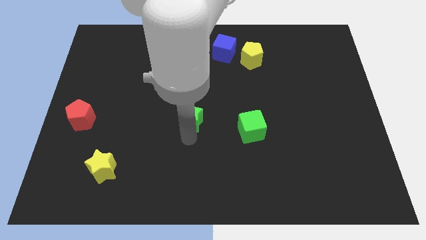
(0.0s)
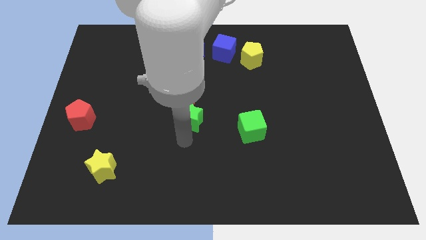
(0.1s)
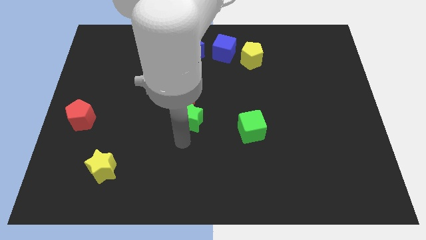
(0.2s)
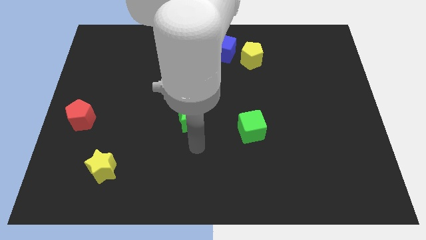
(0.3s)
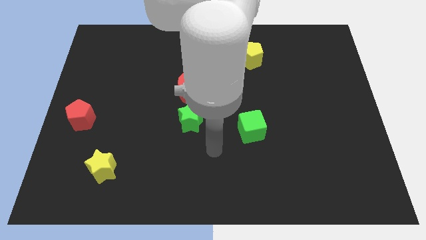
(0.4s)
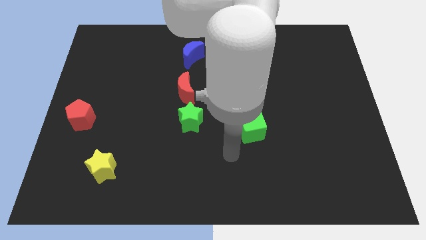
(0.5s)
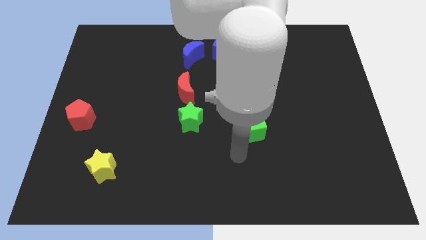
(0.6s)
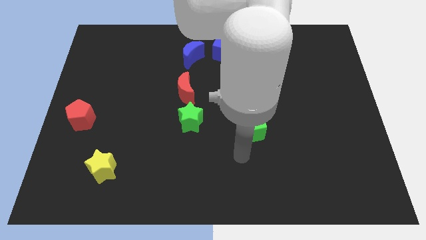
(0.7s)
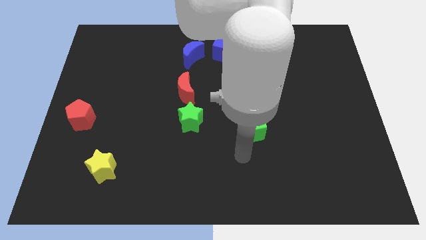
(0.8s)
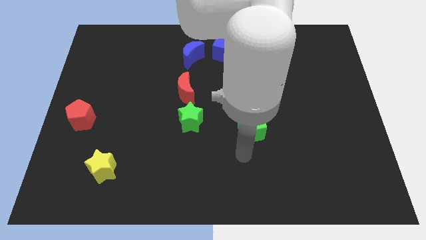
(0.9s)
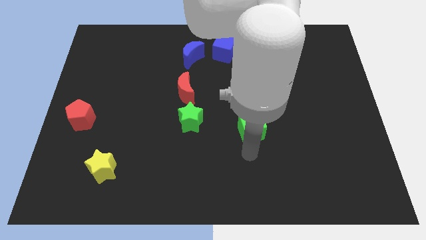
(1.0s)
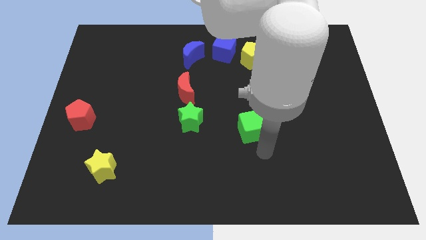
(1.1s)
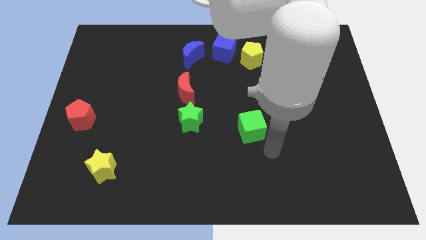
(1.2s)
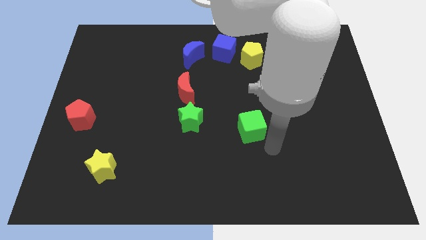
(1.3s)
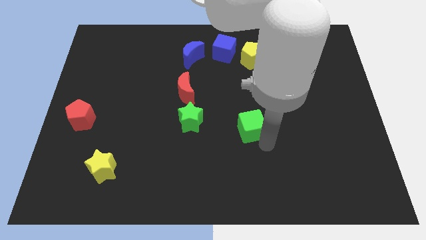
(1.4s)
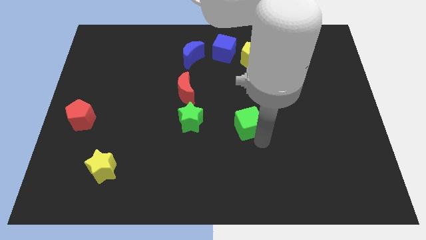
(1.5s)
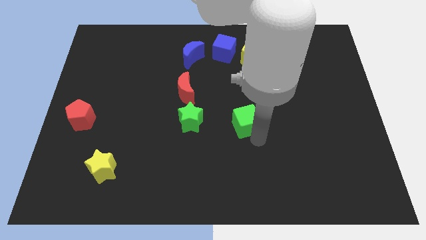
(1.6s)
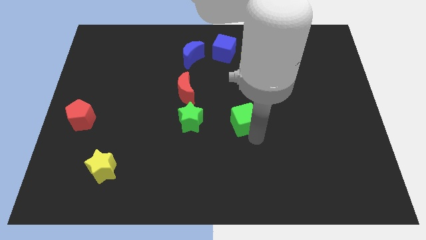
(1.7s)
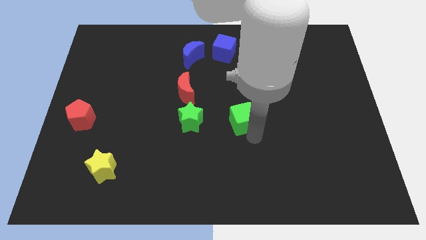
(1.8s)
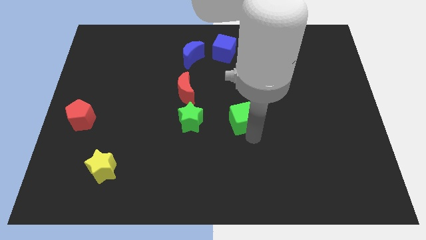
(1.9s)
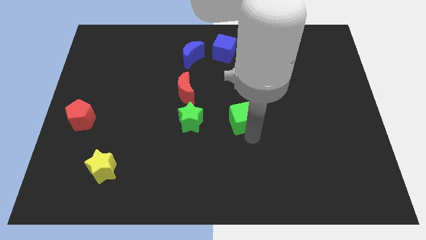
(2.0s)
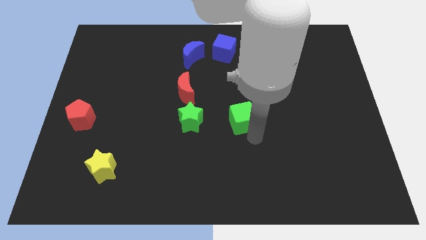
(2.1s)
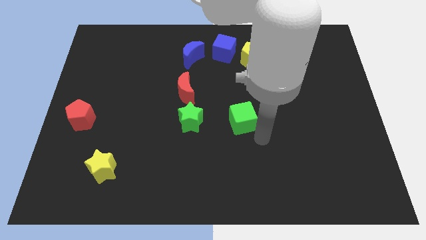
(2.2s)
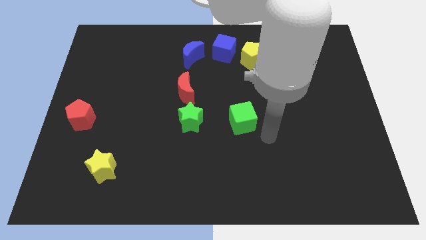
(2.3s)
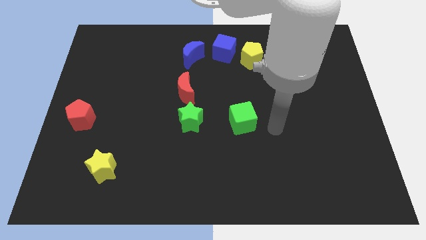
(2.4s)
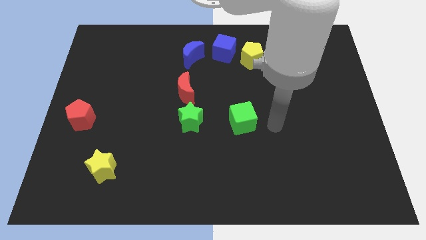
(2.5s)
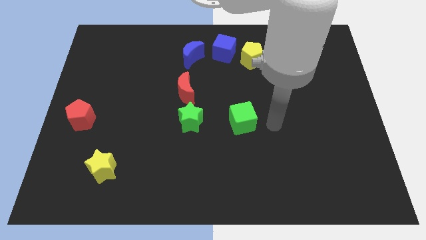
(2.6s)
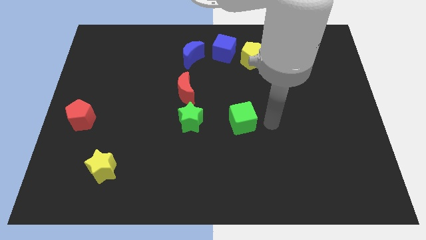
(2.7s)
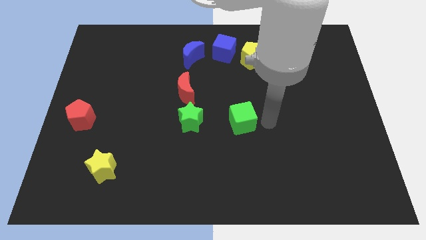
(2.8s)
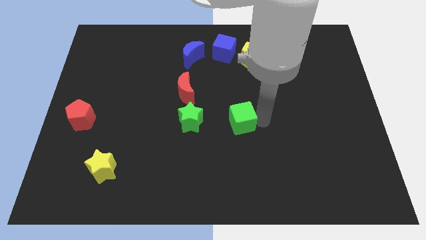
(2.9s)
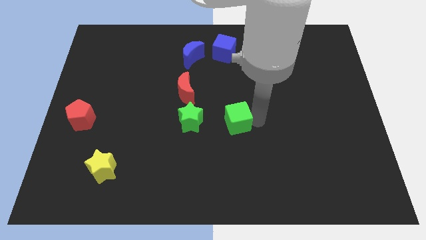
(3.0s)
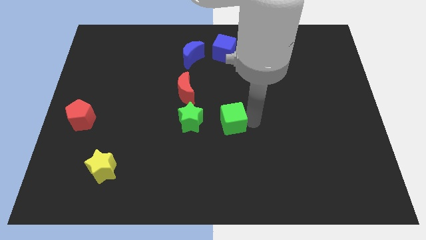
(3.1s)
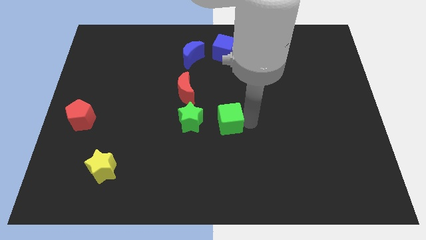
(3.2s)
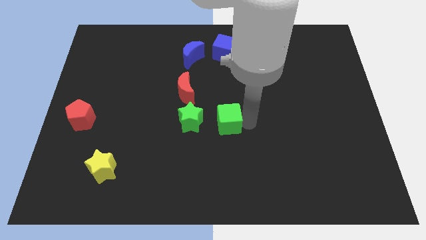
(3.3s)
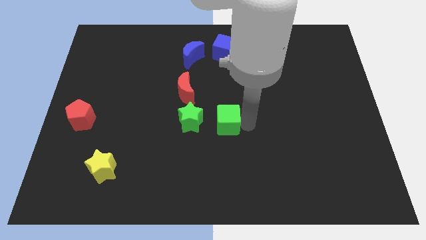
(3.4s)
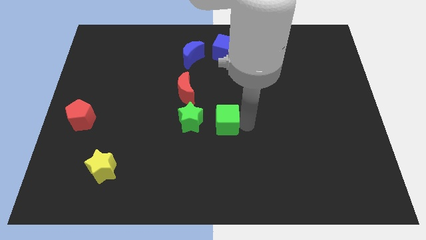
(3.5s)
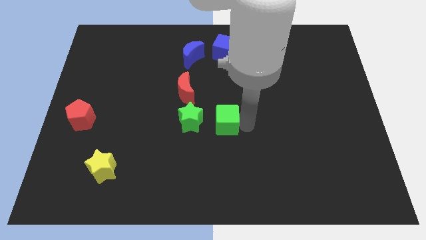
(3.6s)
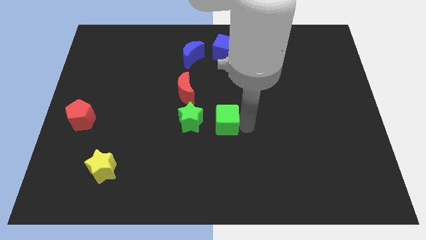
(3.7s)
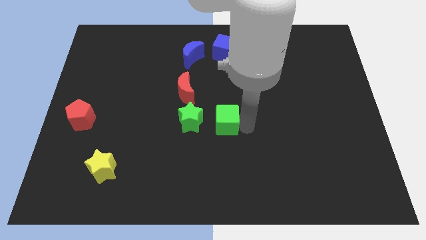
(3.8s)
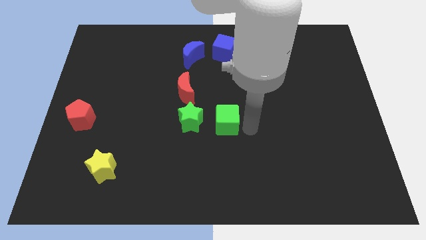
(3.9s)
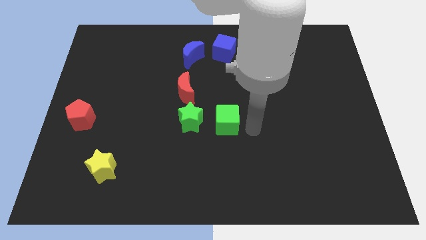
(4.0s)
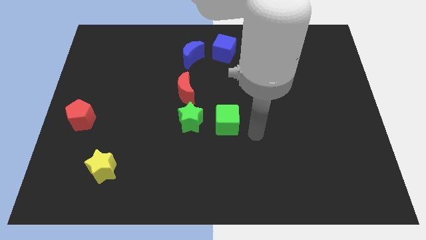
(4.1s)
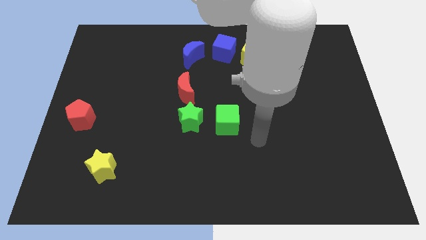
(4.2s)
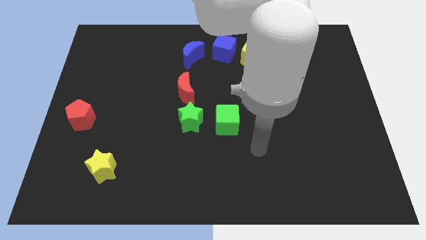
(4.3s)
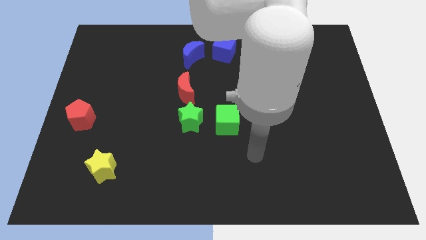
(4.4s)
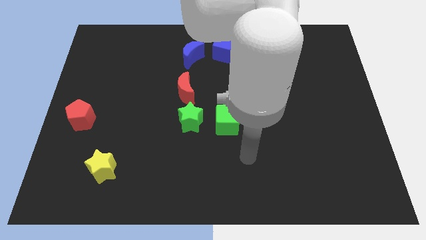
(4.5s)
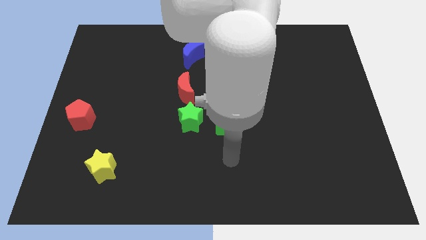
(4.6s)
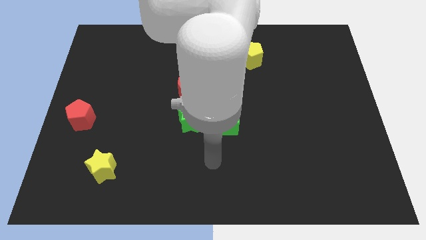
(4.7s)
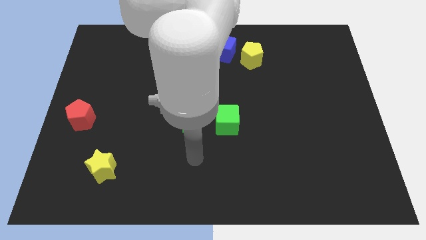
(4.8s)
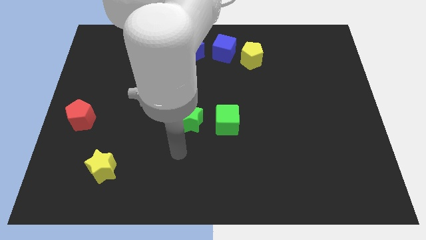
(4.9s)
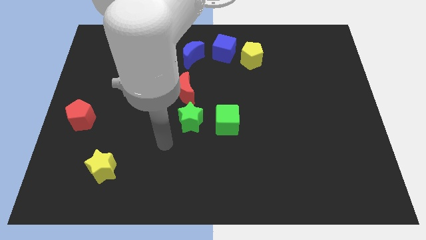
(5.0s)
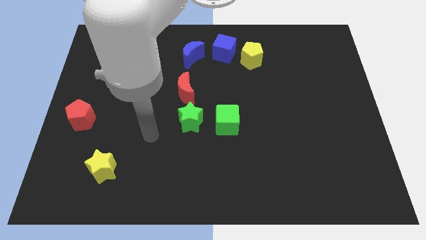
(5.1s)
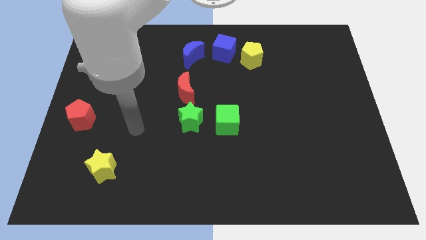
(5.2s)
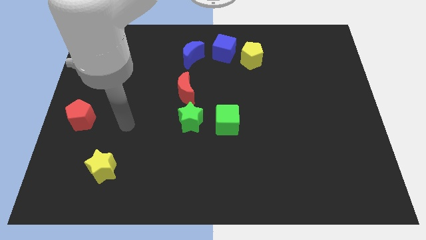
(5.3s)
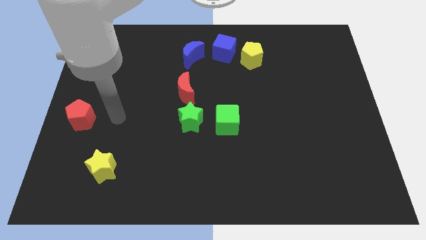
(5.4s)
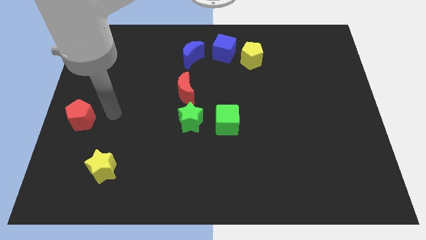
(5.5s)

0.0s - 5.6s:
move the green cube to the right of the green star

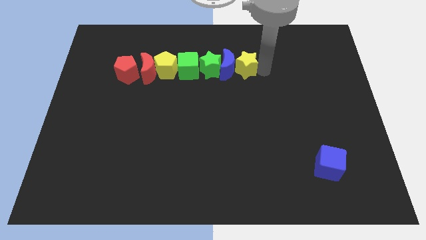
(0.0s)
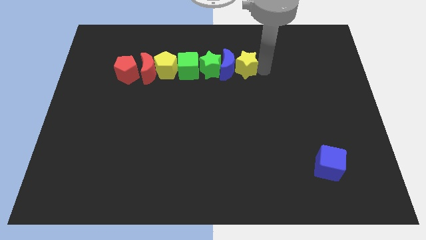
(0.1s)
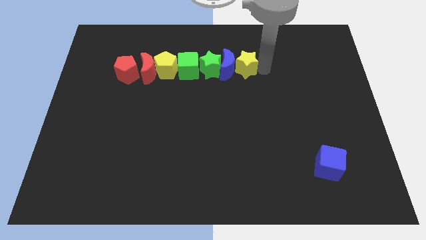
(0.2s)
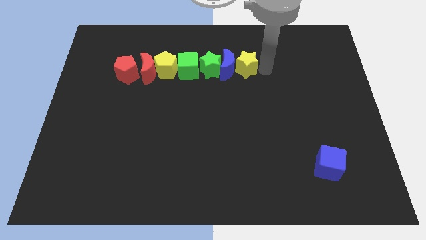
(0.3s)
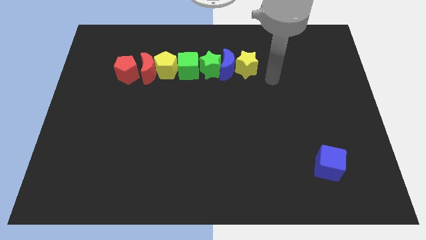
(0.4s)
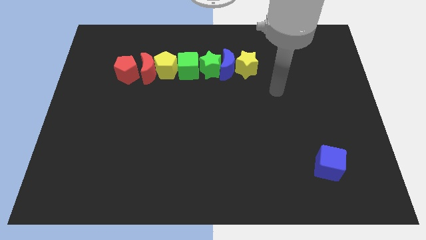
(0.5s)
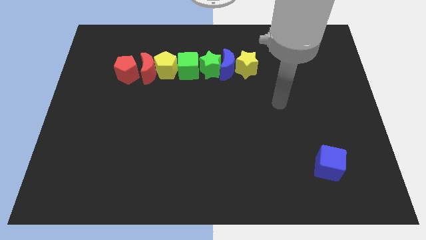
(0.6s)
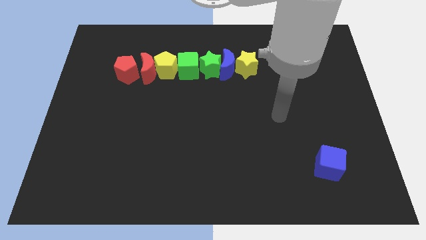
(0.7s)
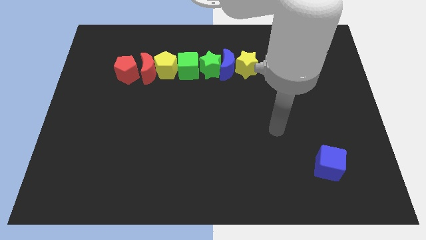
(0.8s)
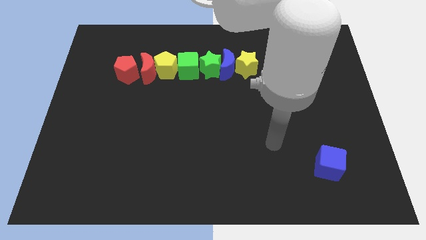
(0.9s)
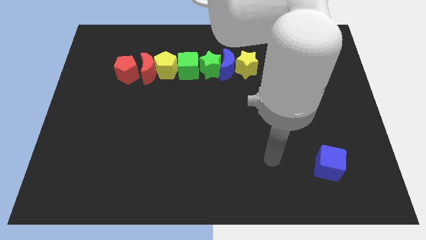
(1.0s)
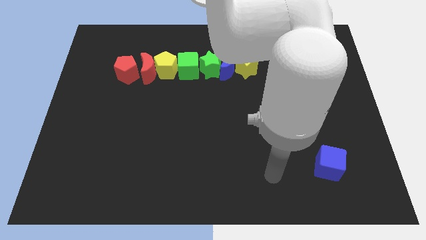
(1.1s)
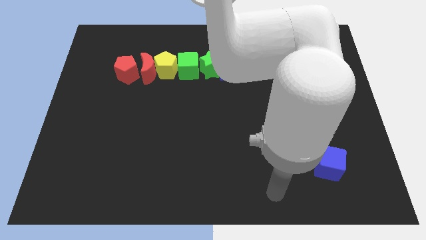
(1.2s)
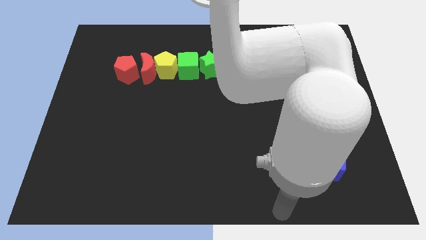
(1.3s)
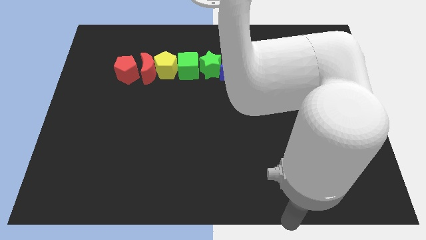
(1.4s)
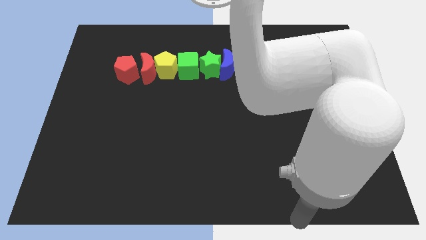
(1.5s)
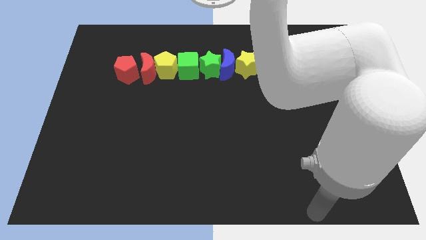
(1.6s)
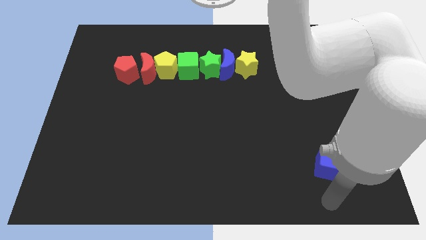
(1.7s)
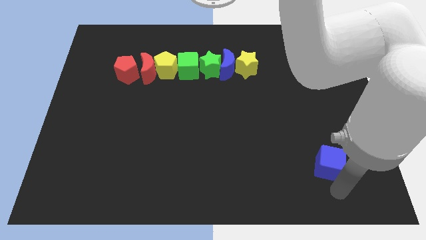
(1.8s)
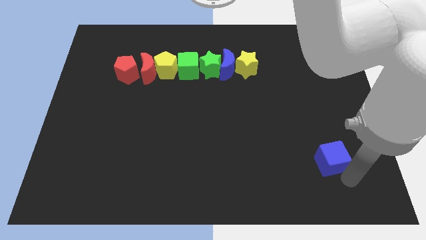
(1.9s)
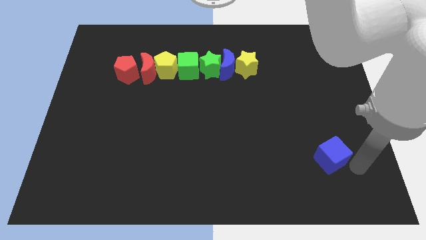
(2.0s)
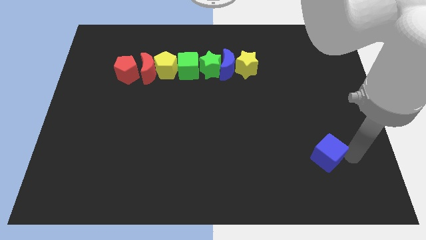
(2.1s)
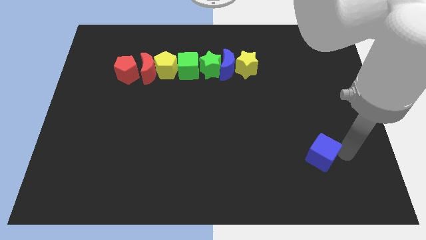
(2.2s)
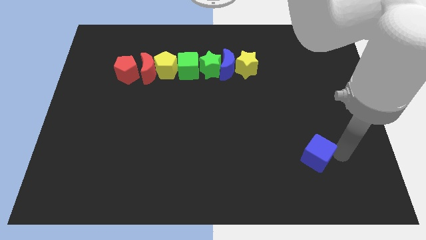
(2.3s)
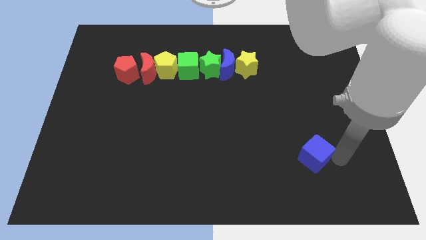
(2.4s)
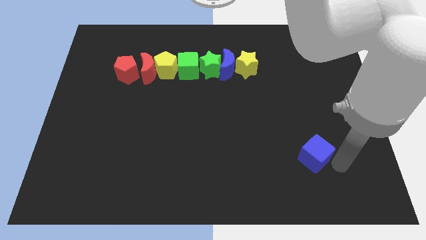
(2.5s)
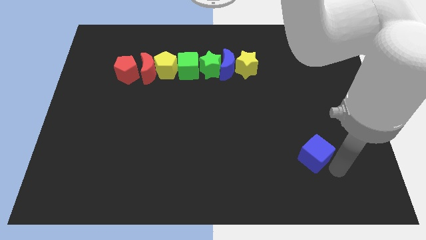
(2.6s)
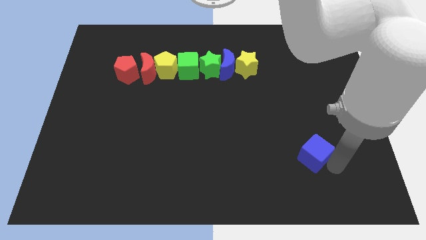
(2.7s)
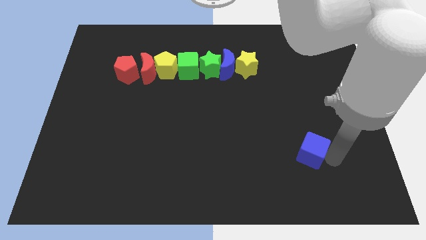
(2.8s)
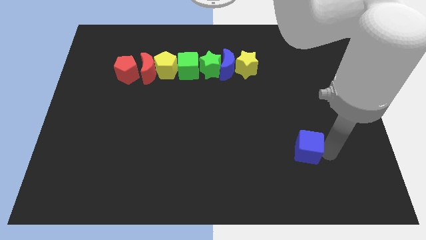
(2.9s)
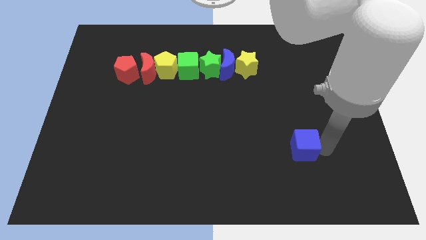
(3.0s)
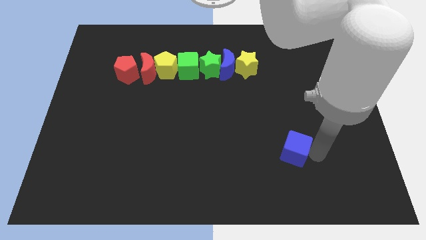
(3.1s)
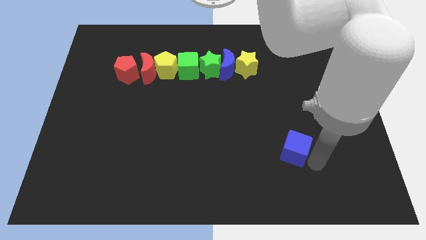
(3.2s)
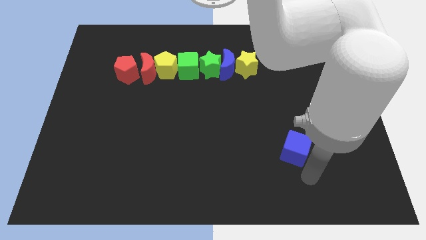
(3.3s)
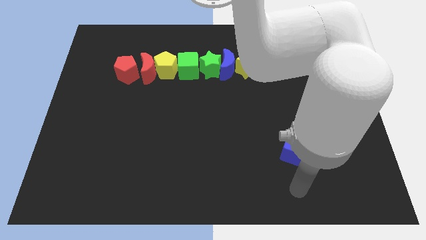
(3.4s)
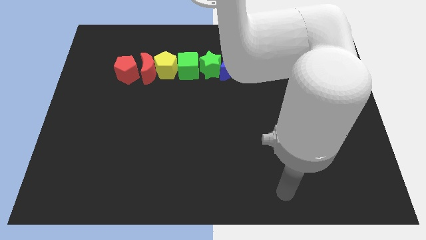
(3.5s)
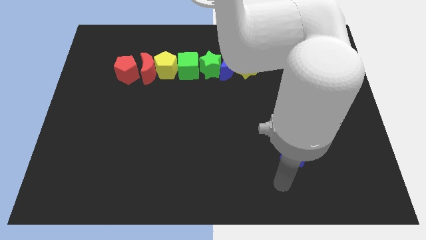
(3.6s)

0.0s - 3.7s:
move the blue cube diagonal to the bottom right corner of the board
